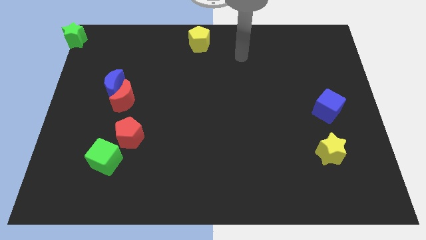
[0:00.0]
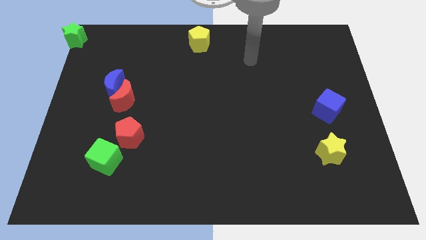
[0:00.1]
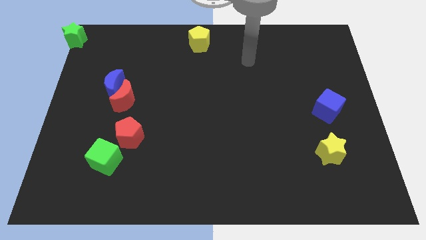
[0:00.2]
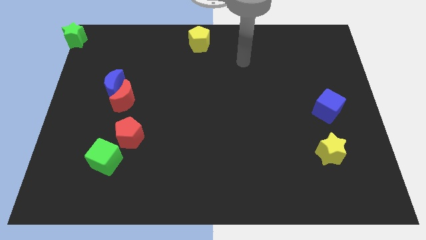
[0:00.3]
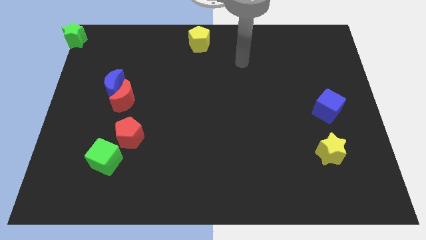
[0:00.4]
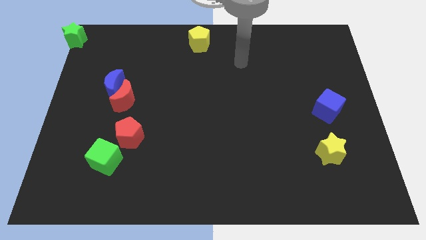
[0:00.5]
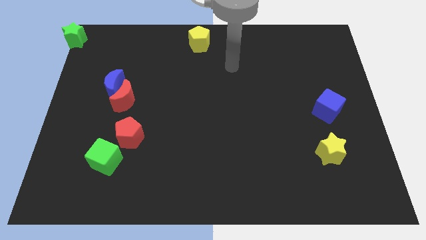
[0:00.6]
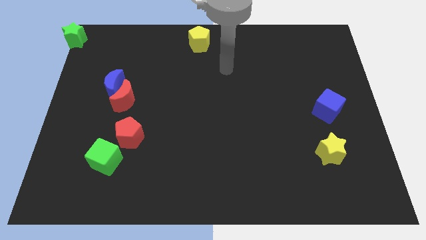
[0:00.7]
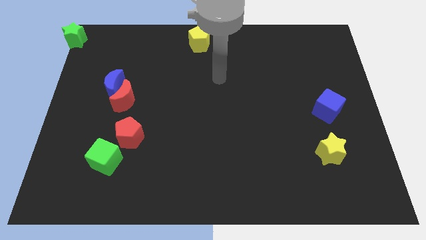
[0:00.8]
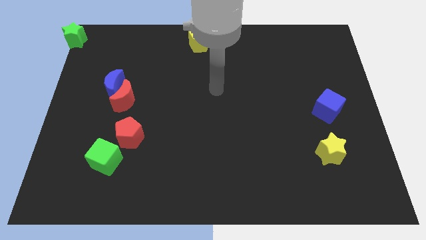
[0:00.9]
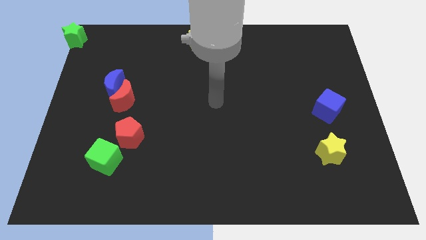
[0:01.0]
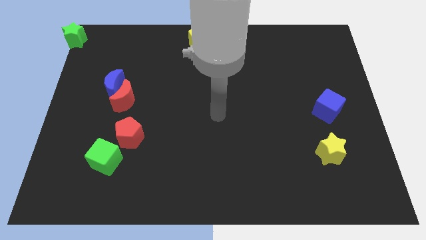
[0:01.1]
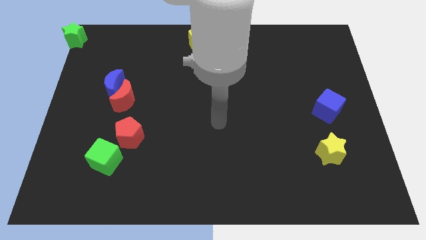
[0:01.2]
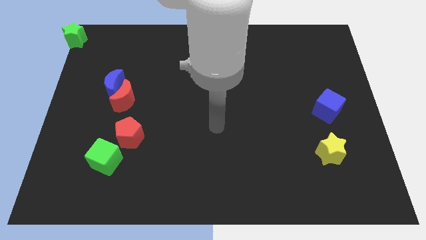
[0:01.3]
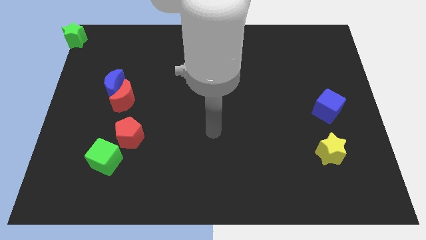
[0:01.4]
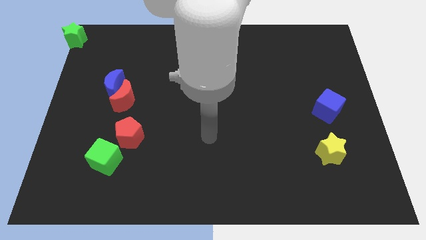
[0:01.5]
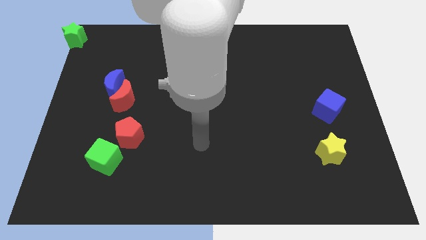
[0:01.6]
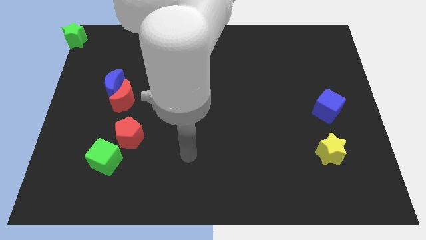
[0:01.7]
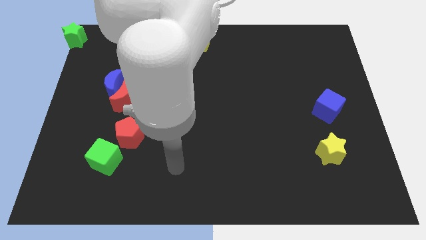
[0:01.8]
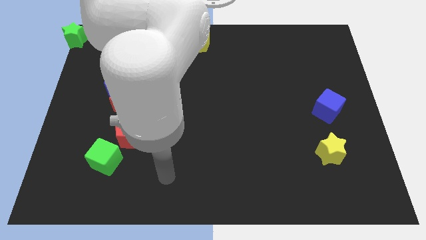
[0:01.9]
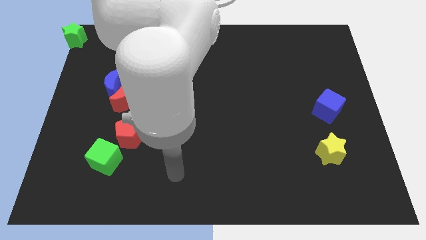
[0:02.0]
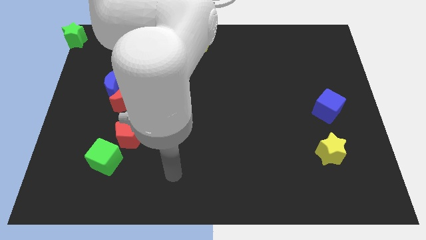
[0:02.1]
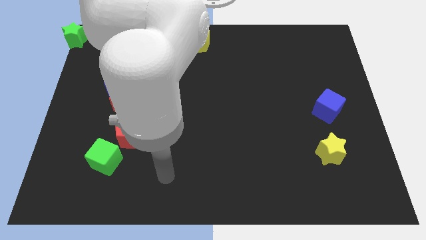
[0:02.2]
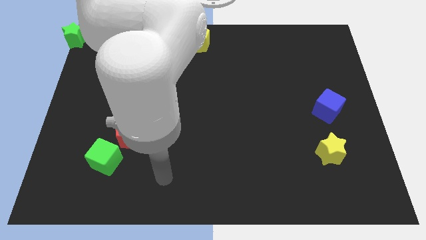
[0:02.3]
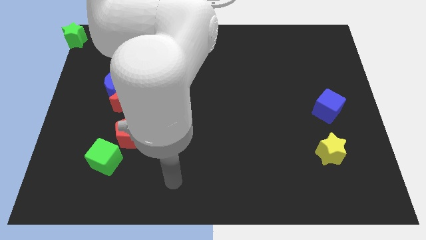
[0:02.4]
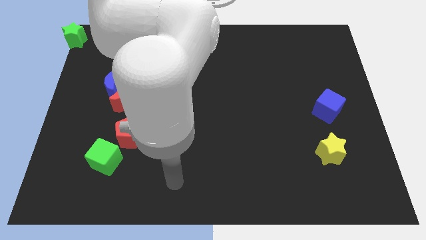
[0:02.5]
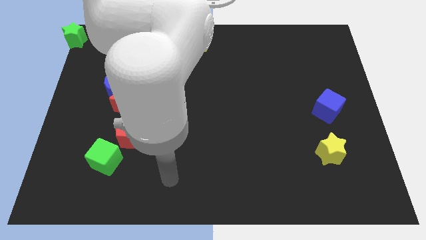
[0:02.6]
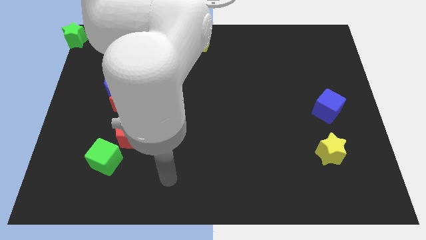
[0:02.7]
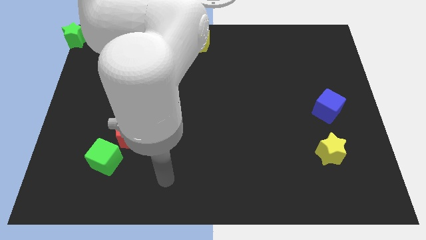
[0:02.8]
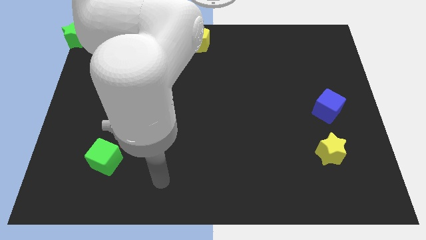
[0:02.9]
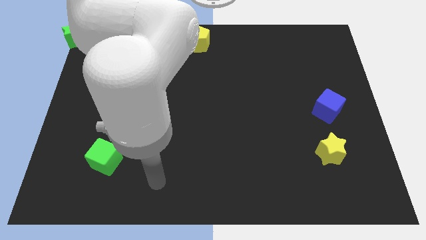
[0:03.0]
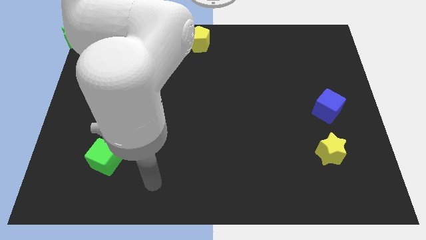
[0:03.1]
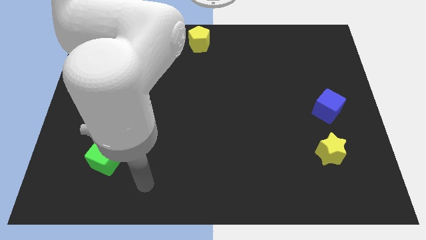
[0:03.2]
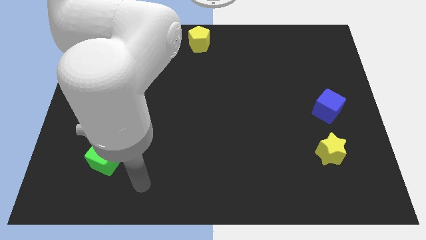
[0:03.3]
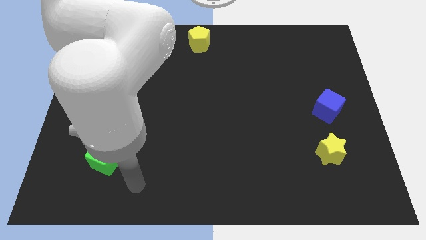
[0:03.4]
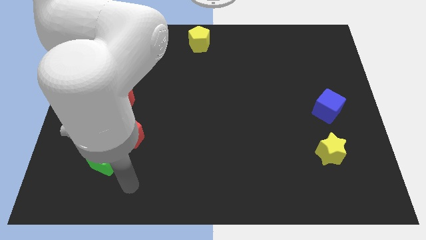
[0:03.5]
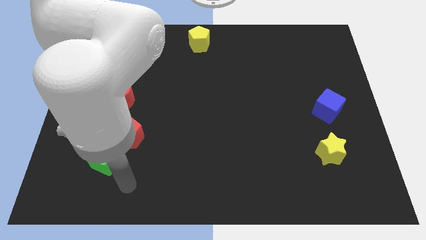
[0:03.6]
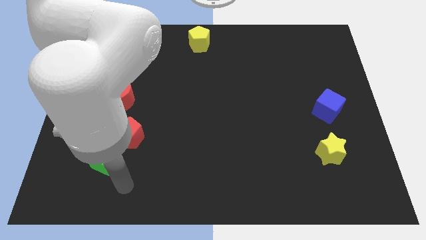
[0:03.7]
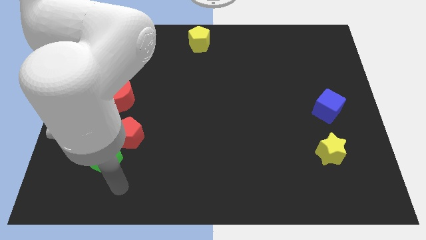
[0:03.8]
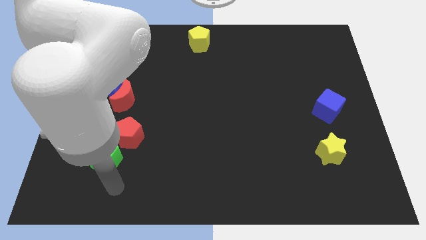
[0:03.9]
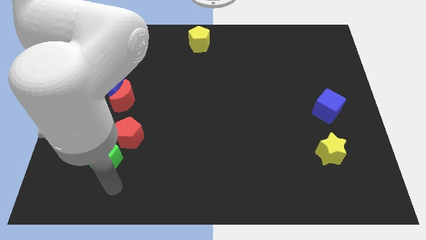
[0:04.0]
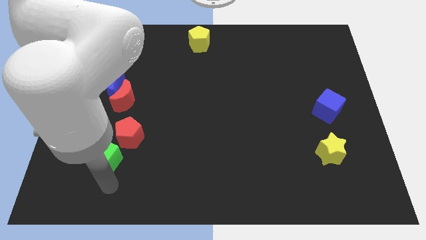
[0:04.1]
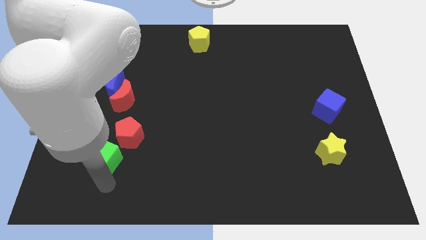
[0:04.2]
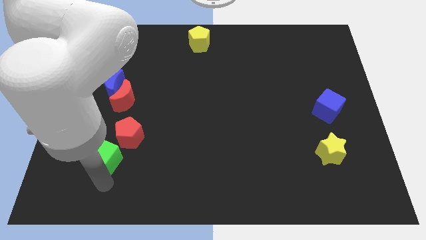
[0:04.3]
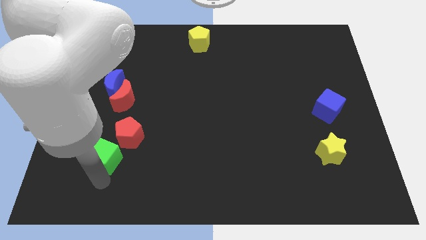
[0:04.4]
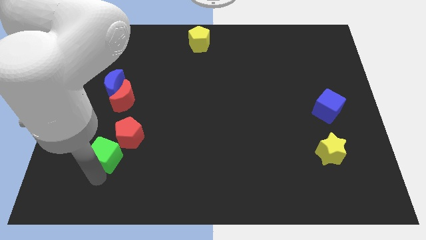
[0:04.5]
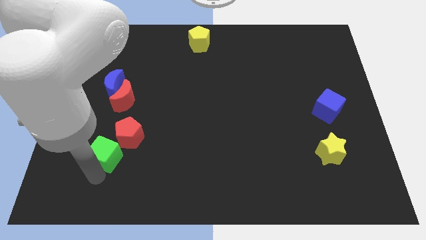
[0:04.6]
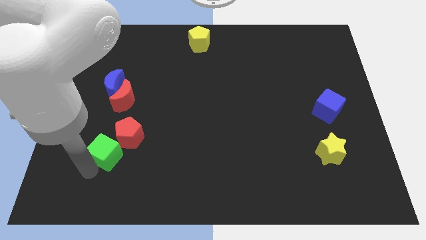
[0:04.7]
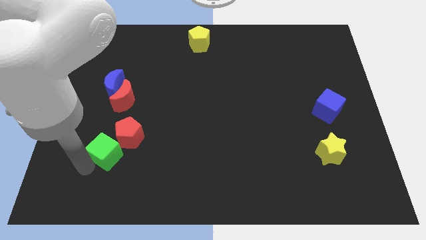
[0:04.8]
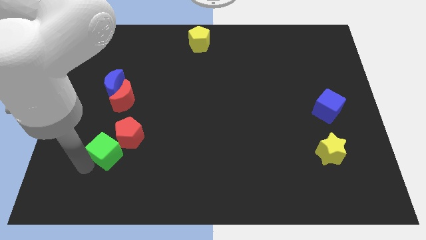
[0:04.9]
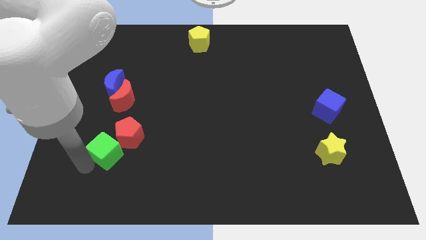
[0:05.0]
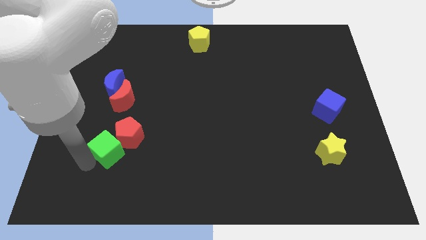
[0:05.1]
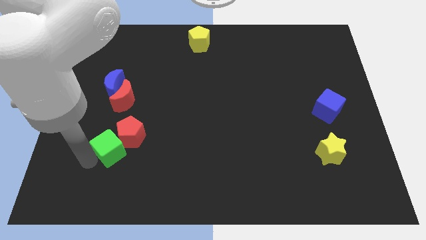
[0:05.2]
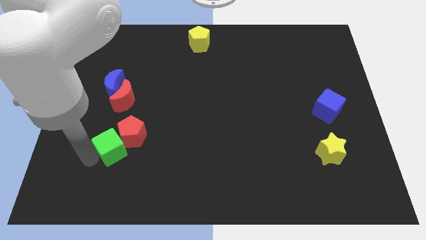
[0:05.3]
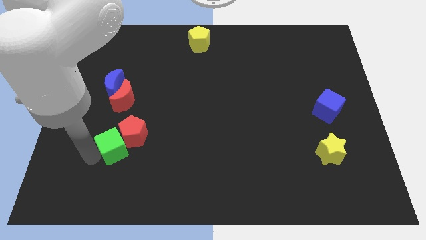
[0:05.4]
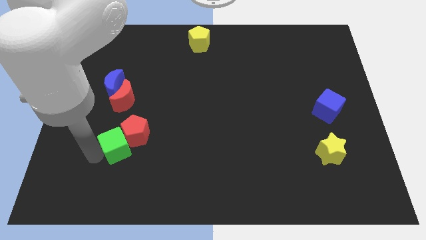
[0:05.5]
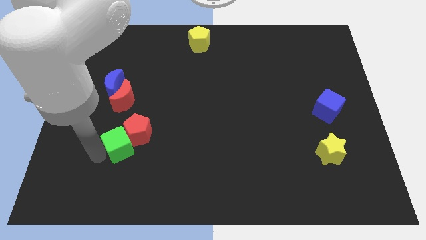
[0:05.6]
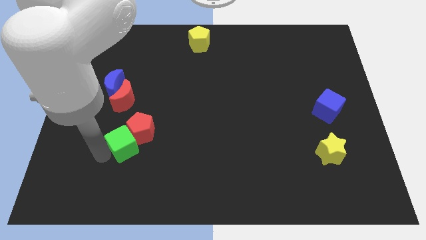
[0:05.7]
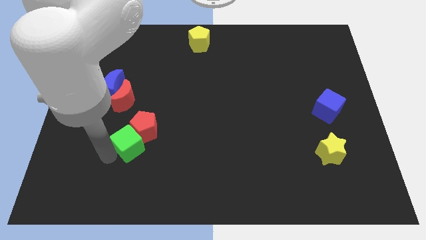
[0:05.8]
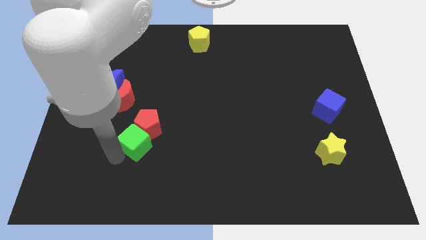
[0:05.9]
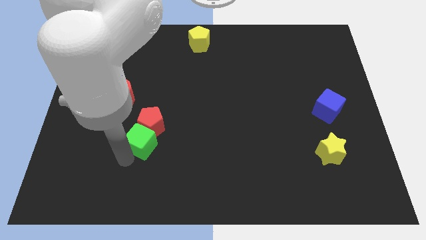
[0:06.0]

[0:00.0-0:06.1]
move the green cube below the red pentagon

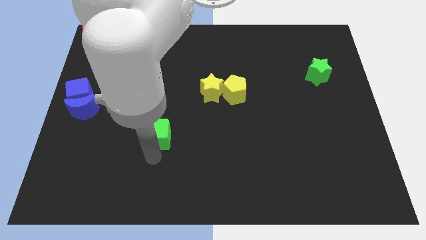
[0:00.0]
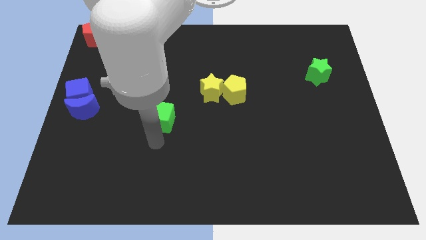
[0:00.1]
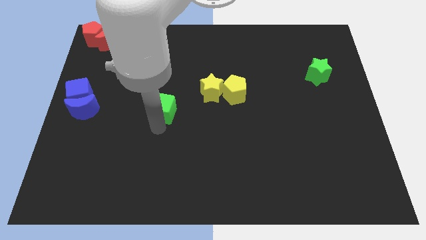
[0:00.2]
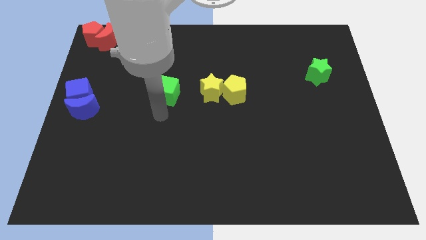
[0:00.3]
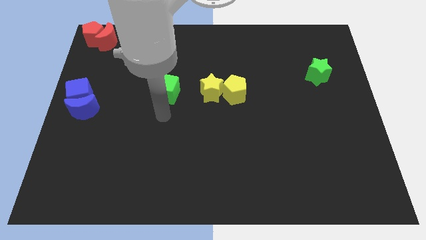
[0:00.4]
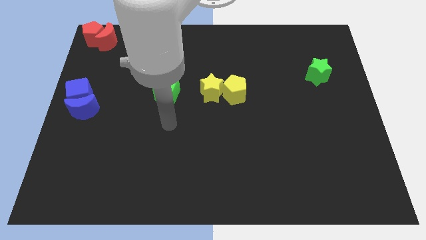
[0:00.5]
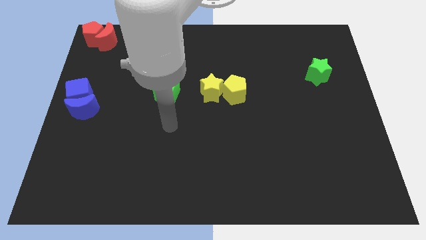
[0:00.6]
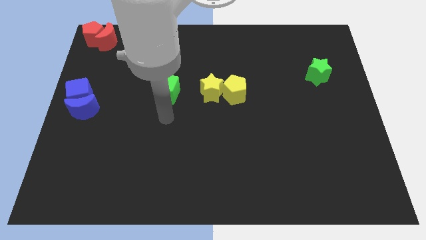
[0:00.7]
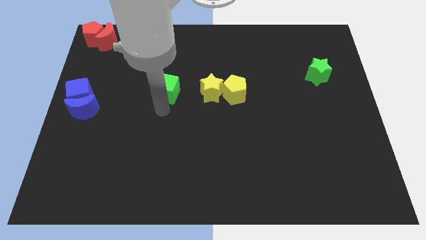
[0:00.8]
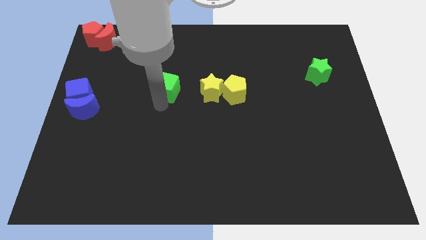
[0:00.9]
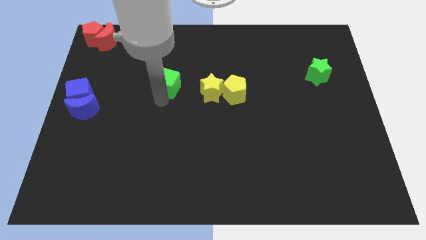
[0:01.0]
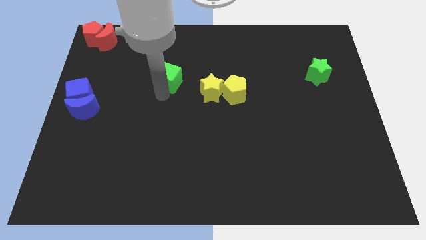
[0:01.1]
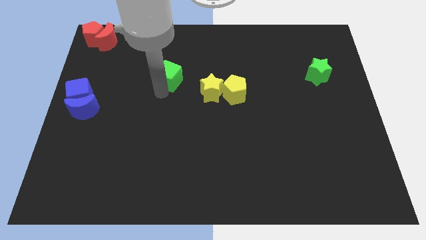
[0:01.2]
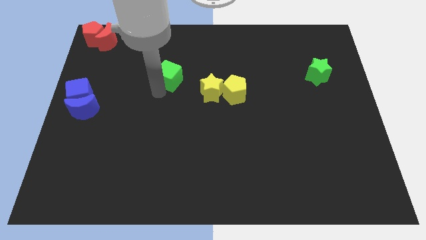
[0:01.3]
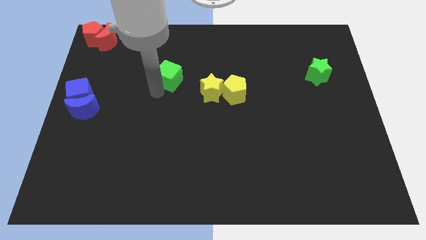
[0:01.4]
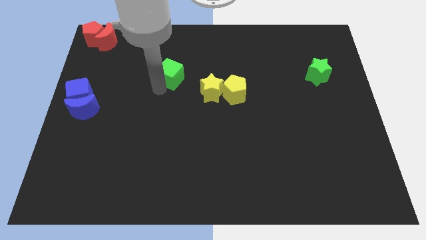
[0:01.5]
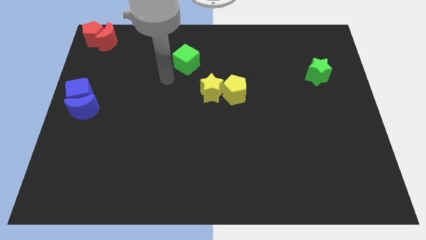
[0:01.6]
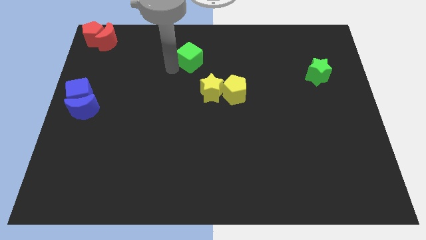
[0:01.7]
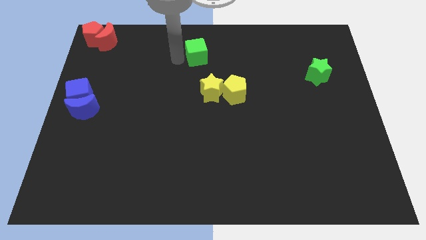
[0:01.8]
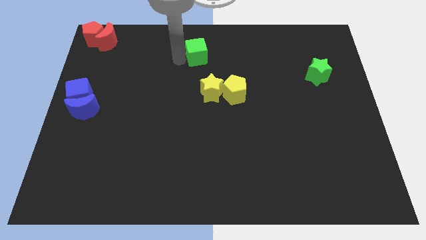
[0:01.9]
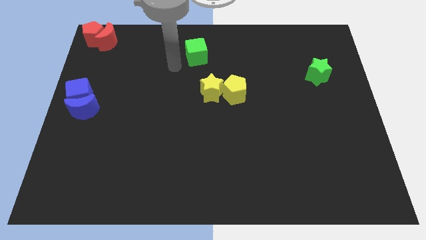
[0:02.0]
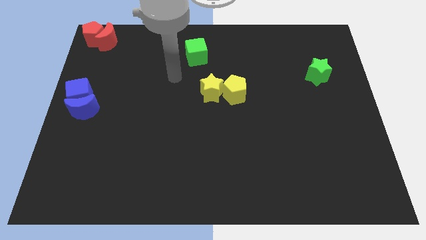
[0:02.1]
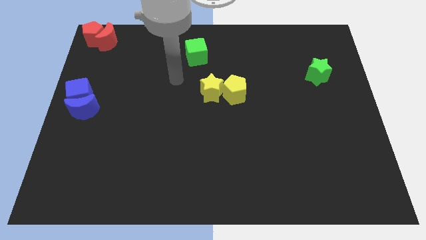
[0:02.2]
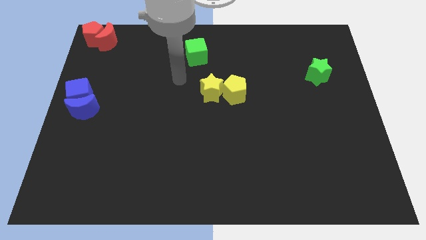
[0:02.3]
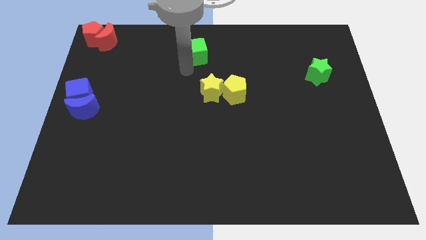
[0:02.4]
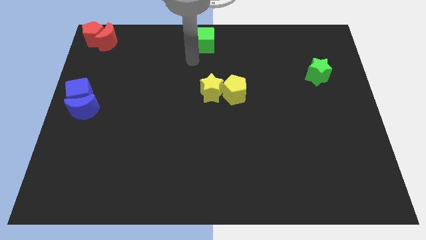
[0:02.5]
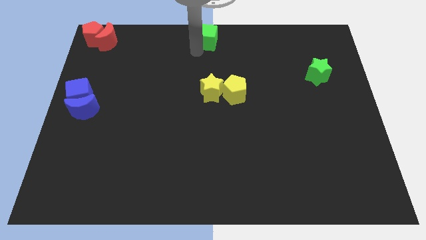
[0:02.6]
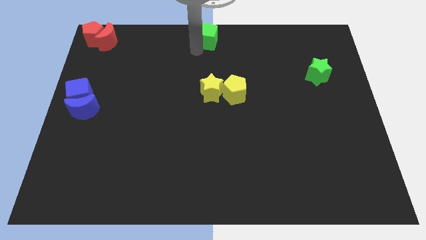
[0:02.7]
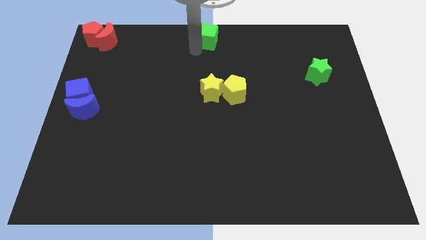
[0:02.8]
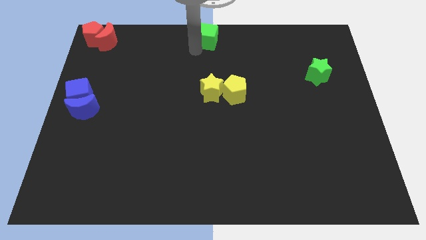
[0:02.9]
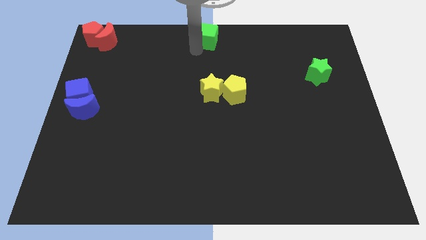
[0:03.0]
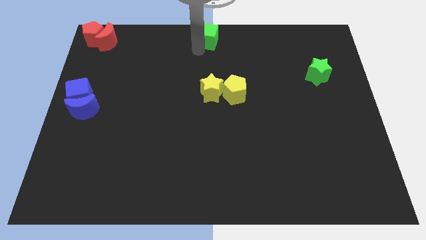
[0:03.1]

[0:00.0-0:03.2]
push the green cube towards the top center of the board
